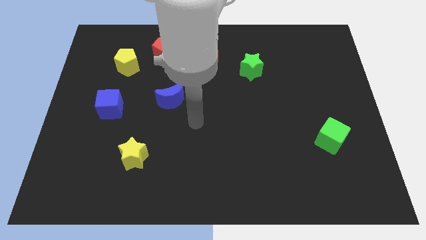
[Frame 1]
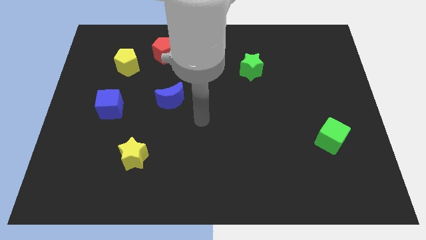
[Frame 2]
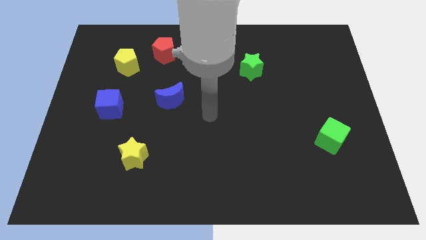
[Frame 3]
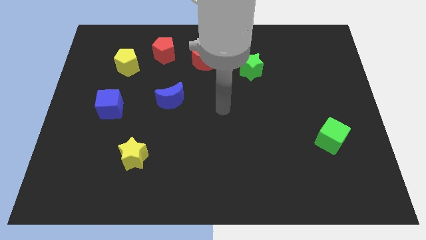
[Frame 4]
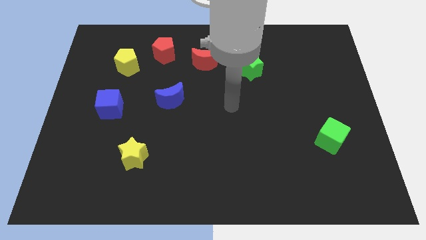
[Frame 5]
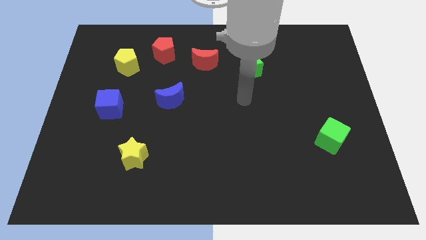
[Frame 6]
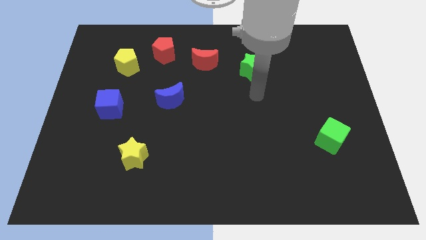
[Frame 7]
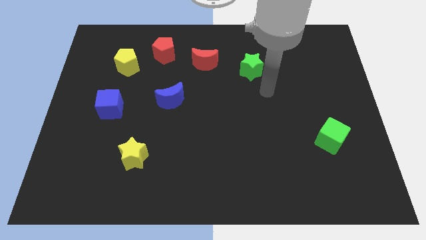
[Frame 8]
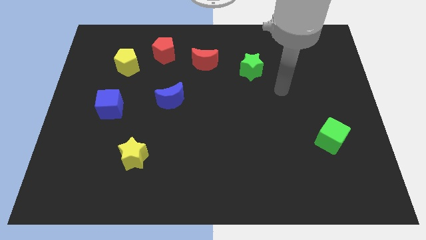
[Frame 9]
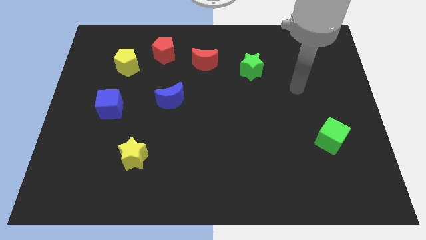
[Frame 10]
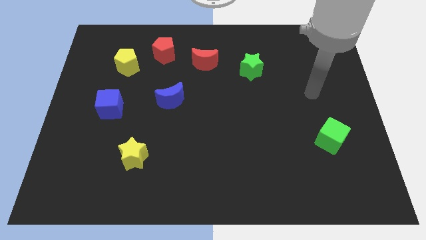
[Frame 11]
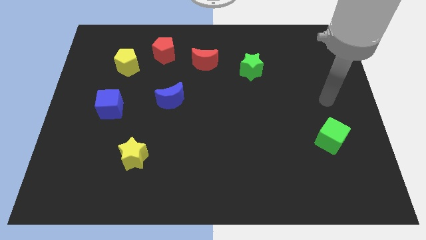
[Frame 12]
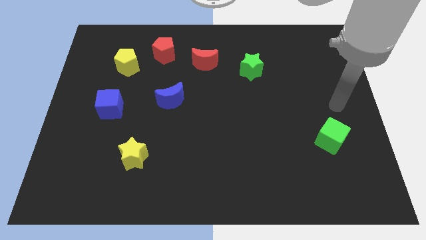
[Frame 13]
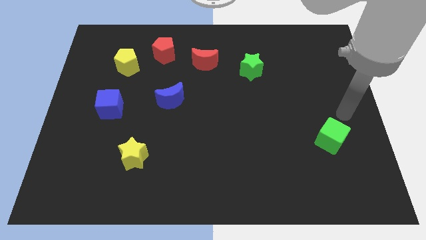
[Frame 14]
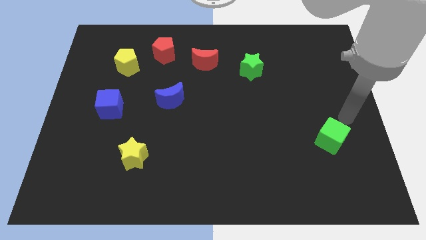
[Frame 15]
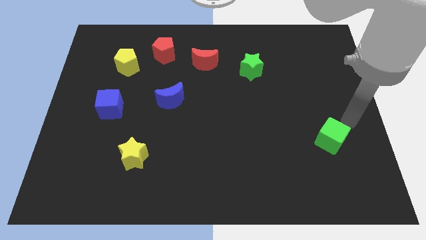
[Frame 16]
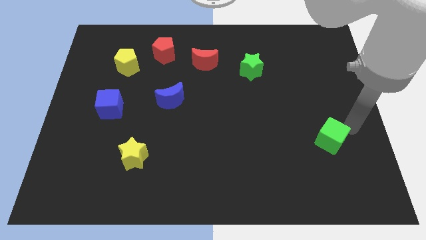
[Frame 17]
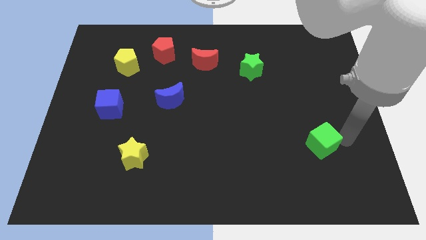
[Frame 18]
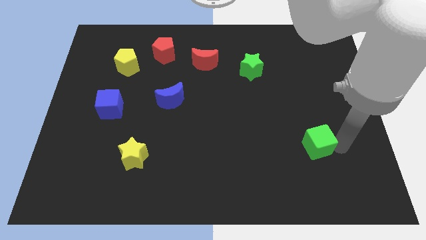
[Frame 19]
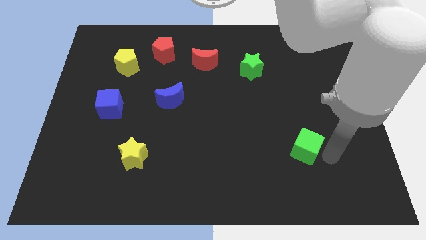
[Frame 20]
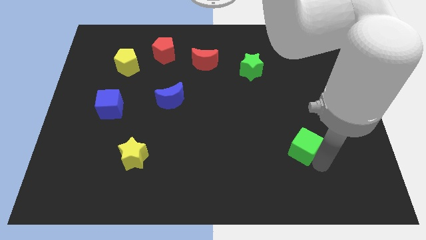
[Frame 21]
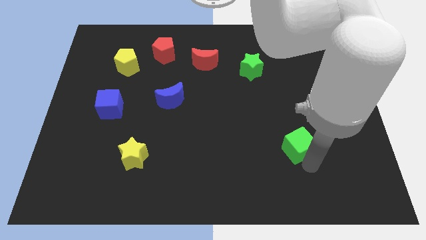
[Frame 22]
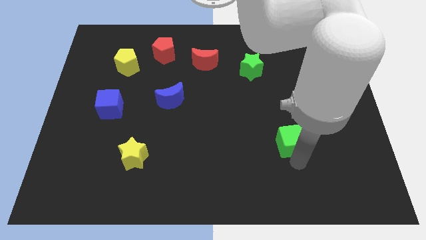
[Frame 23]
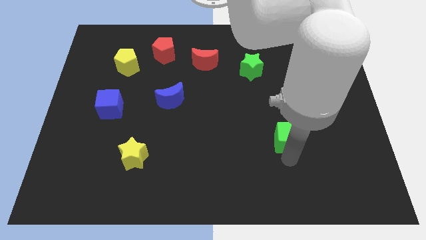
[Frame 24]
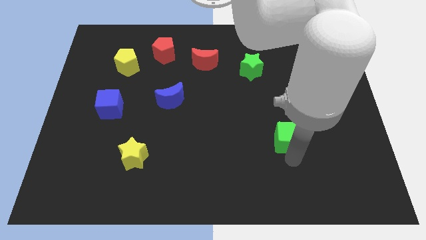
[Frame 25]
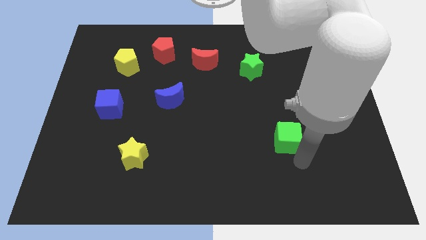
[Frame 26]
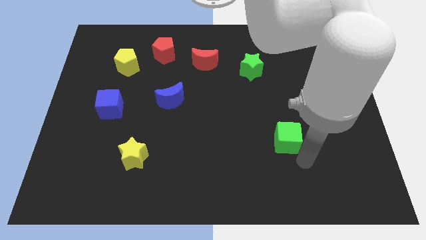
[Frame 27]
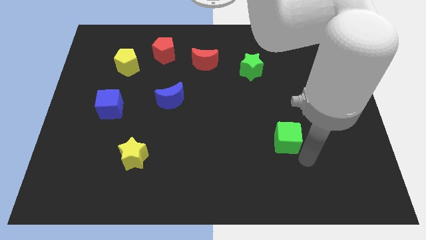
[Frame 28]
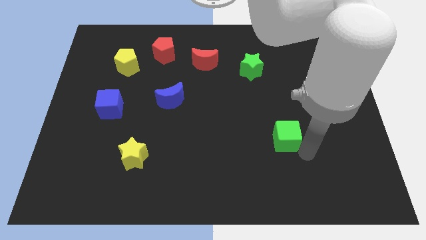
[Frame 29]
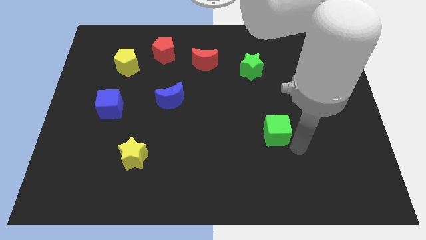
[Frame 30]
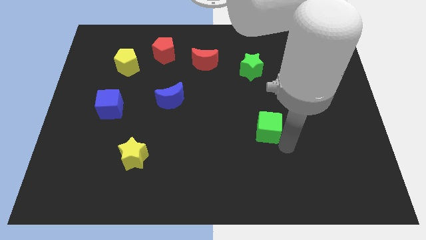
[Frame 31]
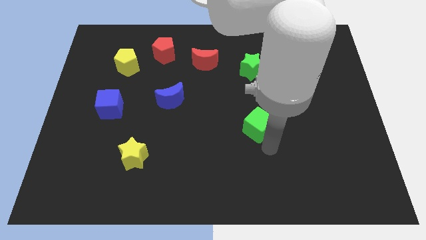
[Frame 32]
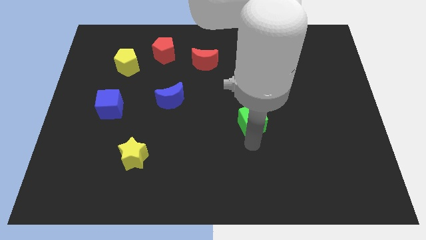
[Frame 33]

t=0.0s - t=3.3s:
move the green cube towards the center of the board

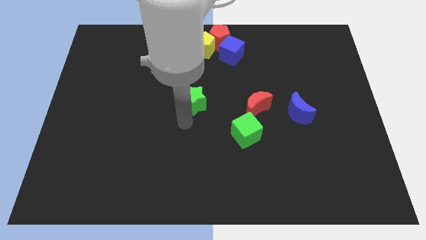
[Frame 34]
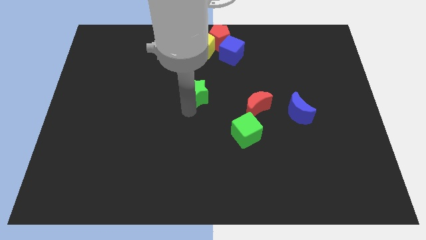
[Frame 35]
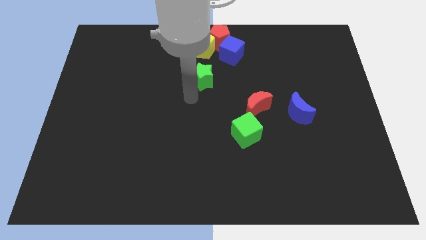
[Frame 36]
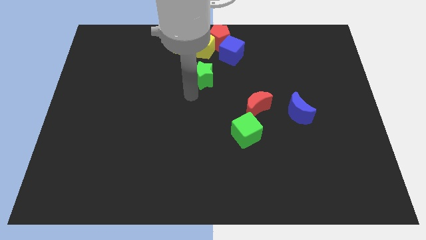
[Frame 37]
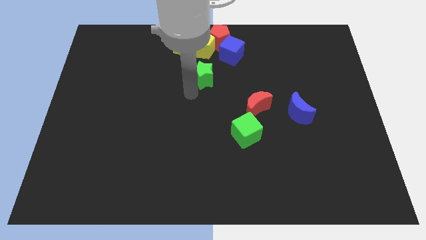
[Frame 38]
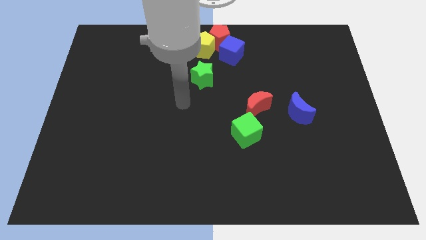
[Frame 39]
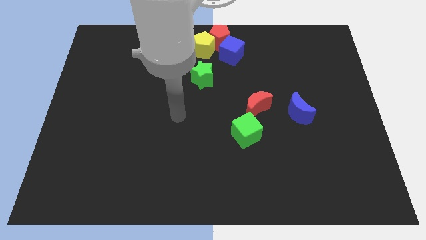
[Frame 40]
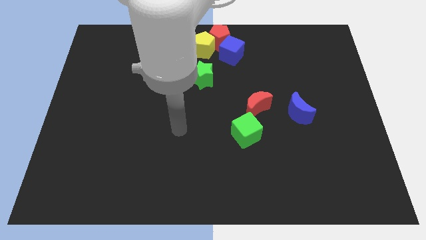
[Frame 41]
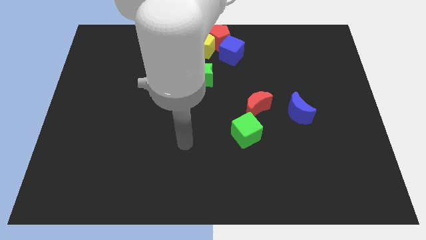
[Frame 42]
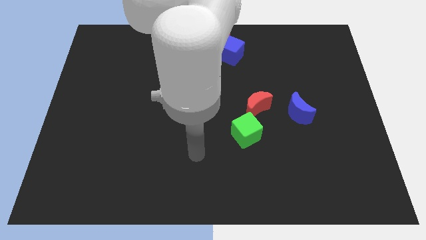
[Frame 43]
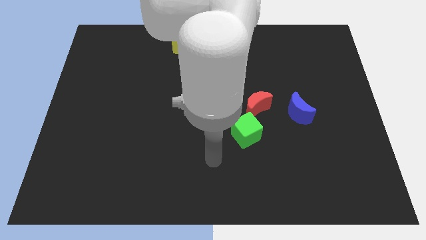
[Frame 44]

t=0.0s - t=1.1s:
push the green star towards the yellow pentagon

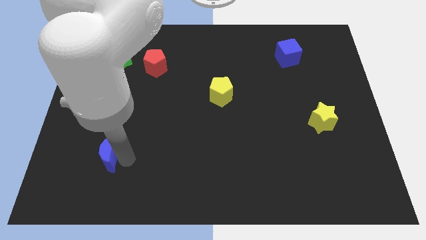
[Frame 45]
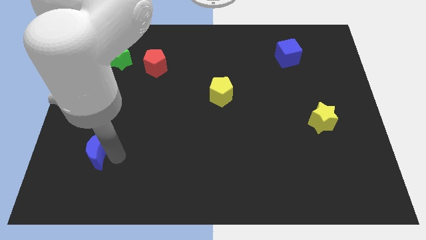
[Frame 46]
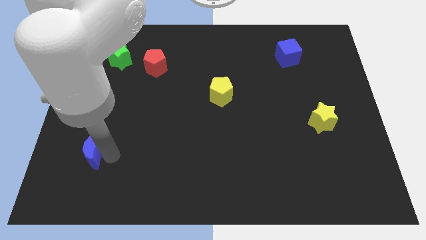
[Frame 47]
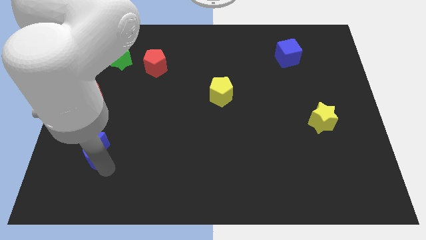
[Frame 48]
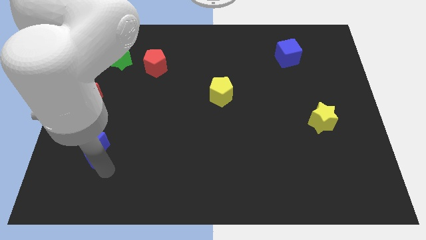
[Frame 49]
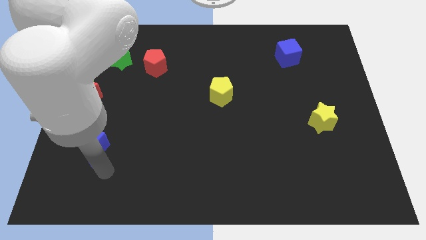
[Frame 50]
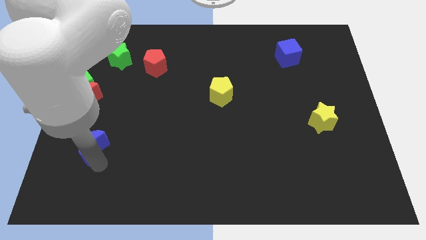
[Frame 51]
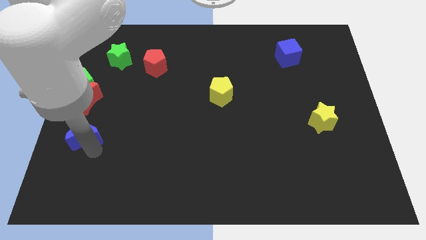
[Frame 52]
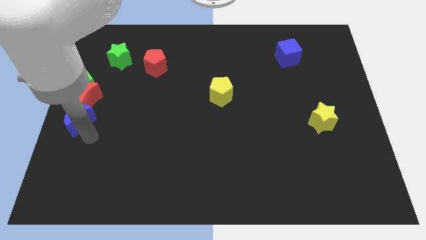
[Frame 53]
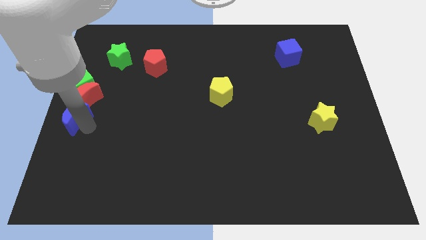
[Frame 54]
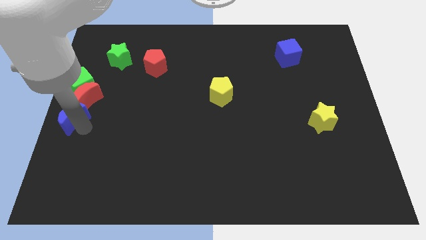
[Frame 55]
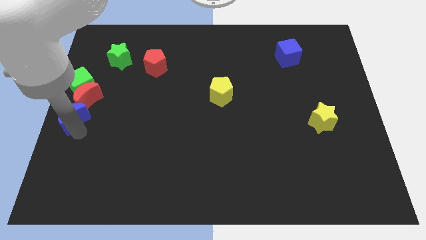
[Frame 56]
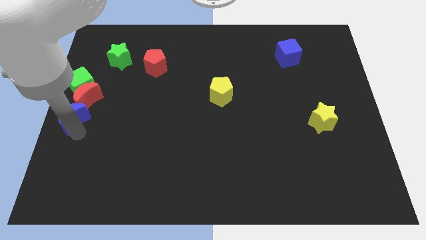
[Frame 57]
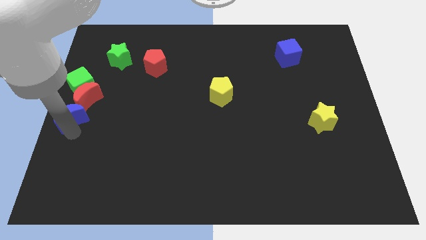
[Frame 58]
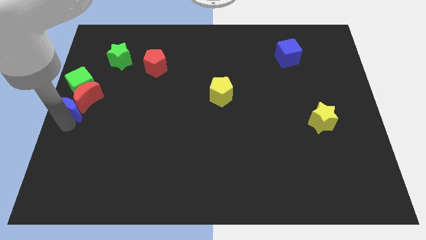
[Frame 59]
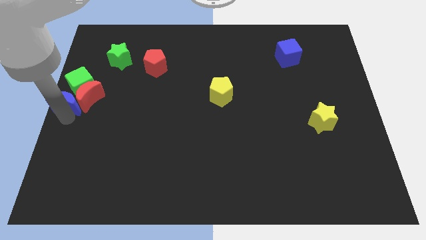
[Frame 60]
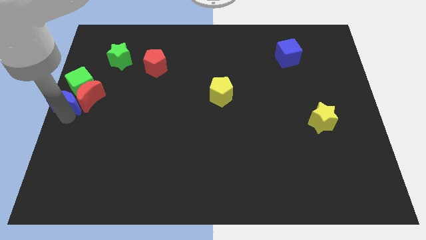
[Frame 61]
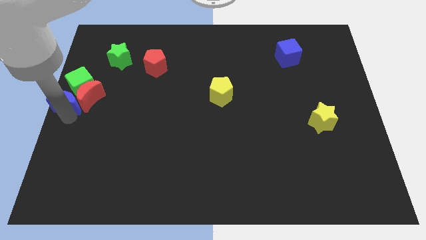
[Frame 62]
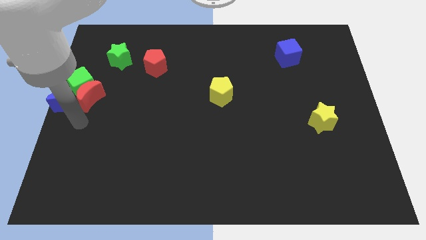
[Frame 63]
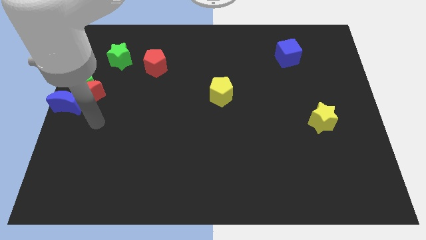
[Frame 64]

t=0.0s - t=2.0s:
place the blue crescent below green cube

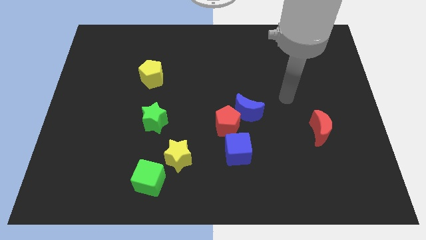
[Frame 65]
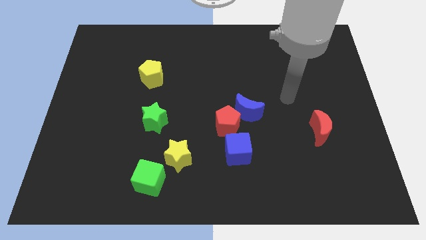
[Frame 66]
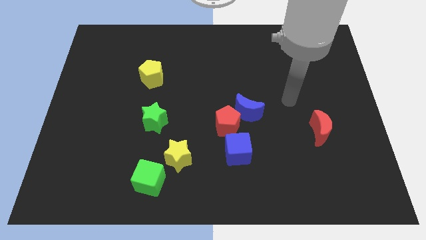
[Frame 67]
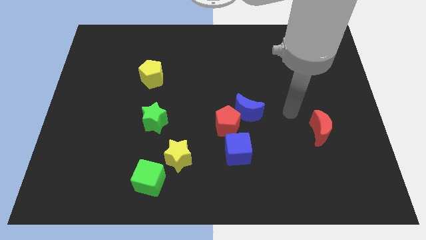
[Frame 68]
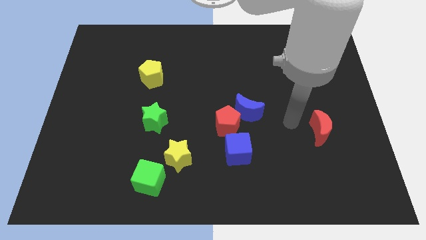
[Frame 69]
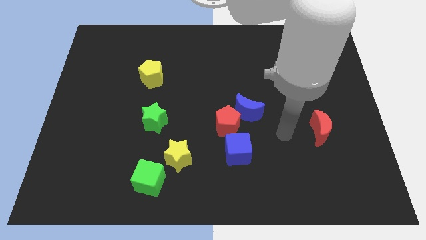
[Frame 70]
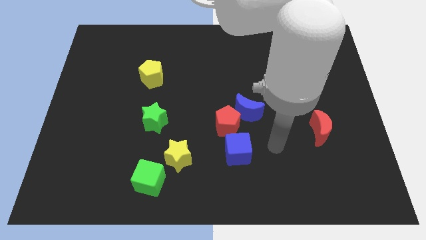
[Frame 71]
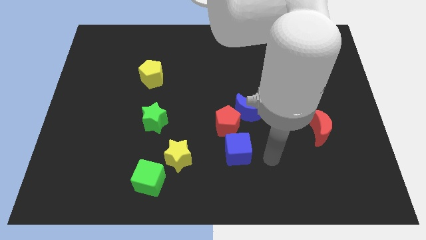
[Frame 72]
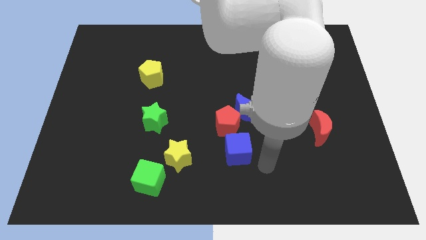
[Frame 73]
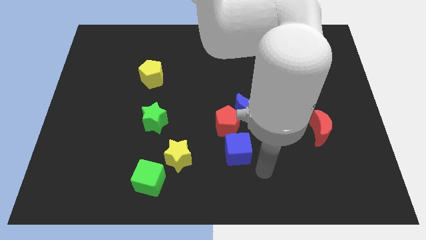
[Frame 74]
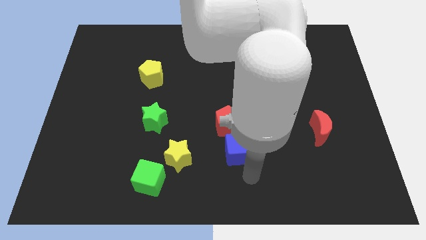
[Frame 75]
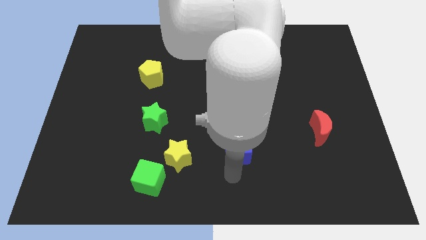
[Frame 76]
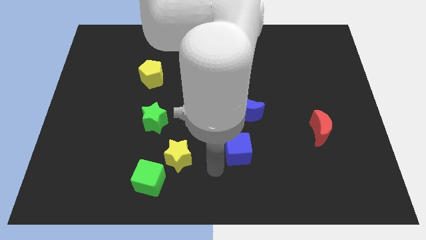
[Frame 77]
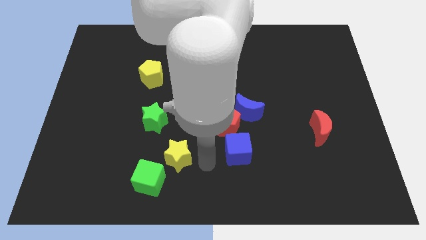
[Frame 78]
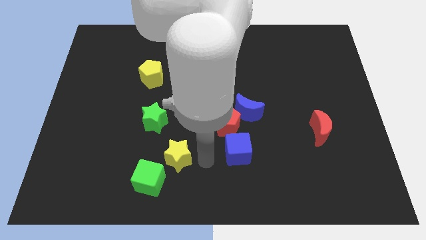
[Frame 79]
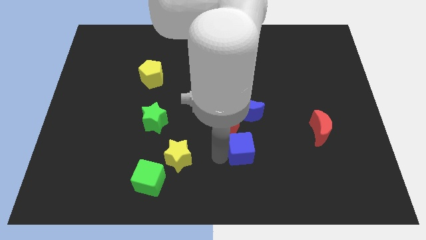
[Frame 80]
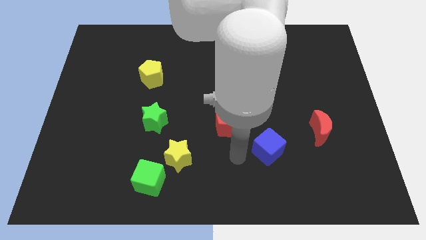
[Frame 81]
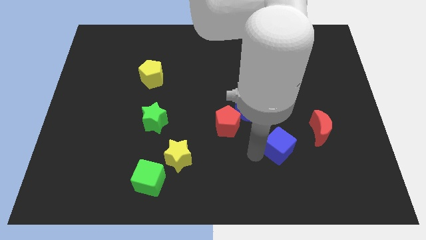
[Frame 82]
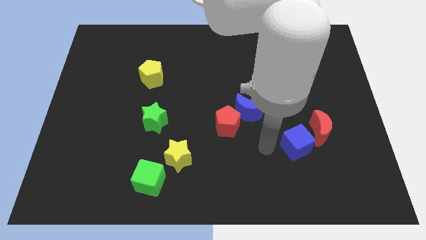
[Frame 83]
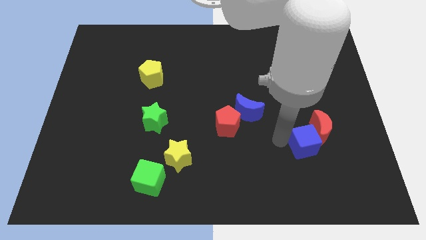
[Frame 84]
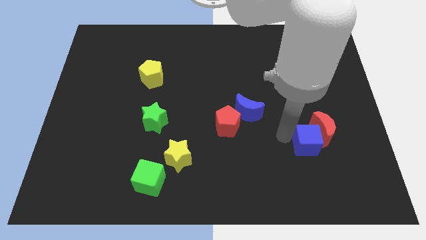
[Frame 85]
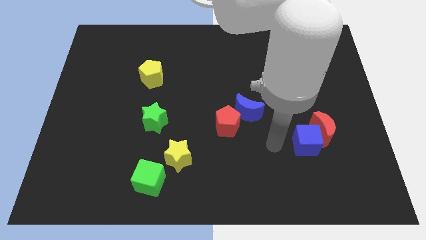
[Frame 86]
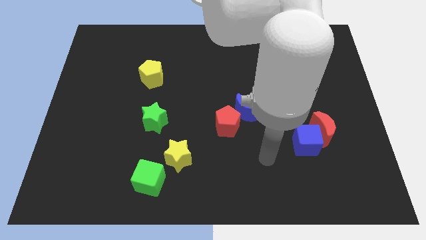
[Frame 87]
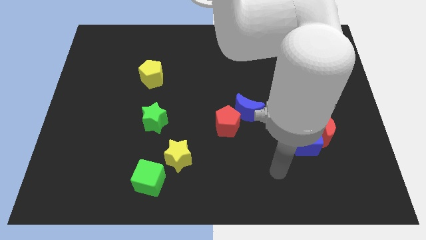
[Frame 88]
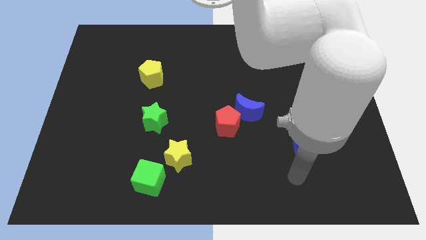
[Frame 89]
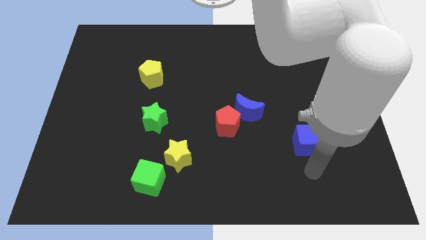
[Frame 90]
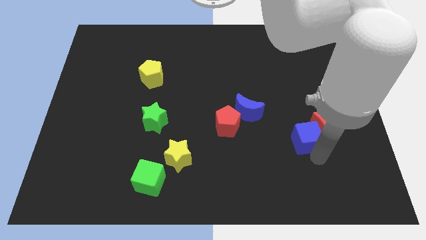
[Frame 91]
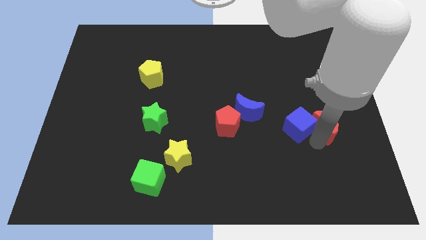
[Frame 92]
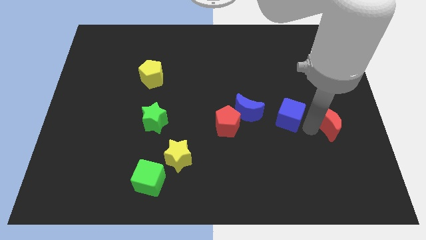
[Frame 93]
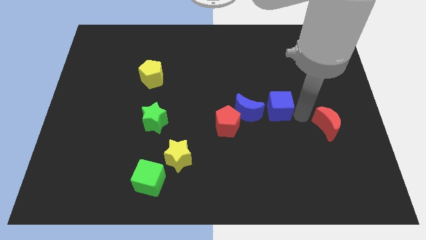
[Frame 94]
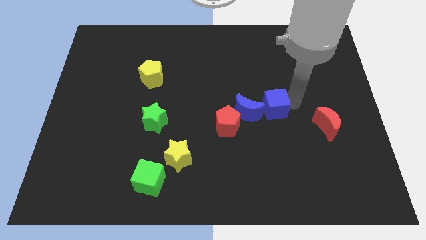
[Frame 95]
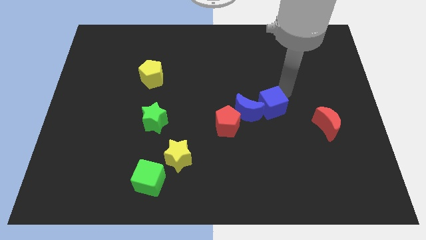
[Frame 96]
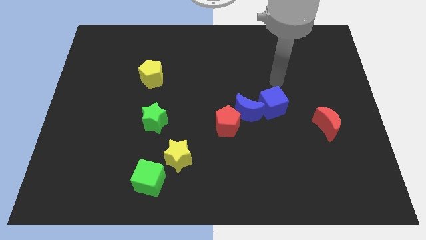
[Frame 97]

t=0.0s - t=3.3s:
place the blue cube to the right of the blue crescent
